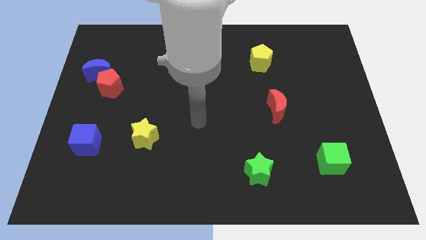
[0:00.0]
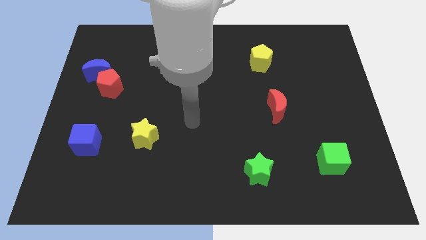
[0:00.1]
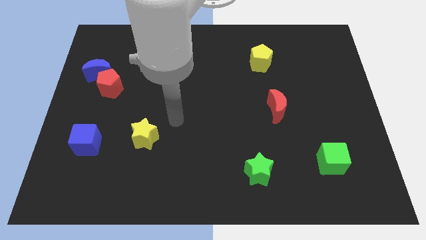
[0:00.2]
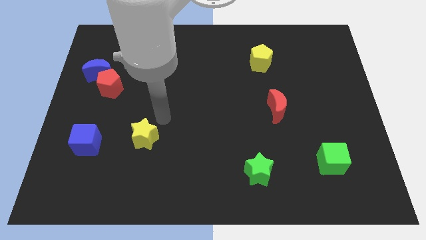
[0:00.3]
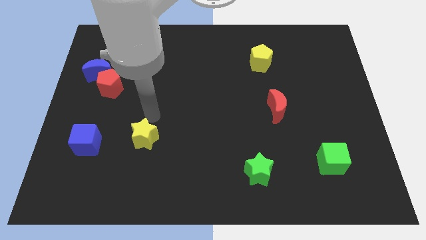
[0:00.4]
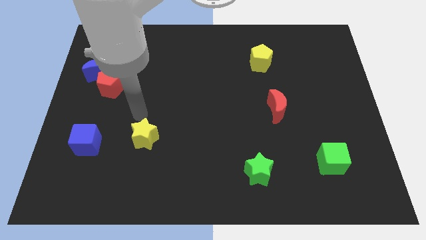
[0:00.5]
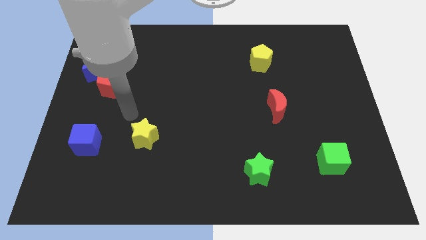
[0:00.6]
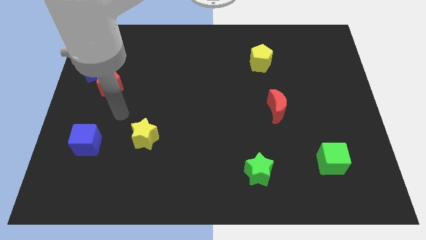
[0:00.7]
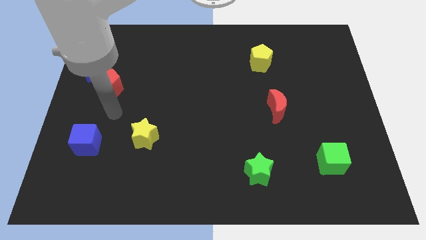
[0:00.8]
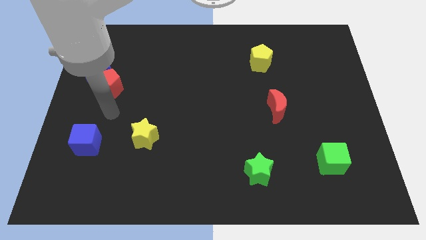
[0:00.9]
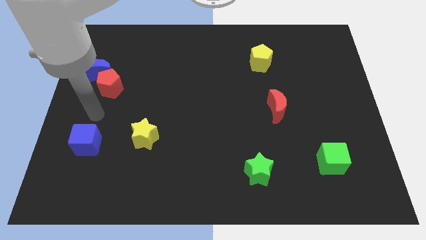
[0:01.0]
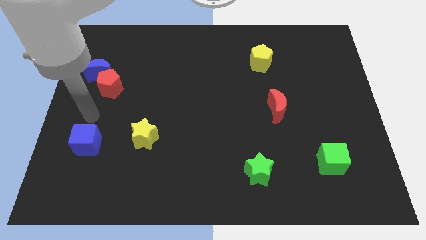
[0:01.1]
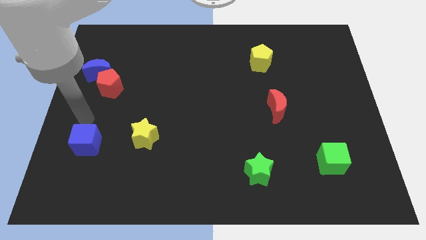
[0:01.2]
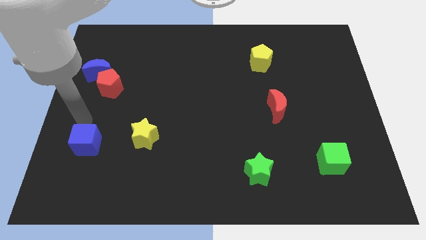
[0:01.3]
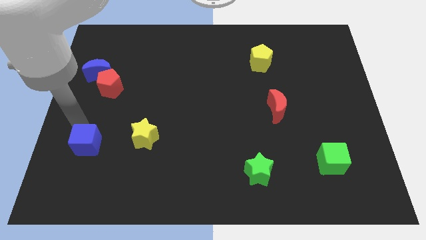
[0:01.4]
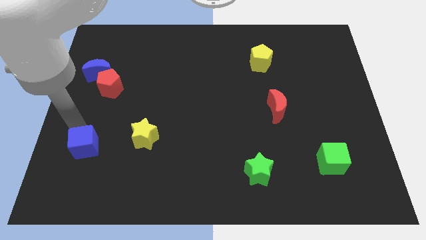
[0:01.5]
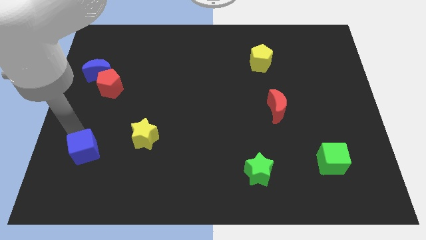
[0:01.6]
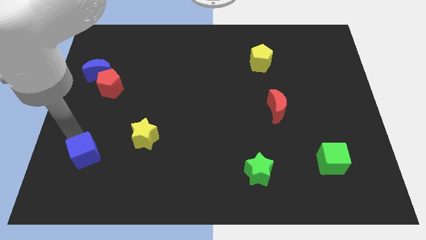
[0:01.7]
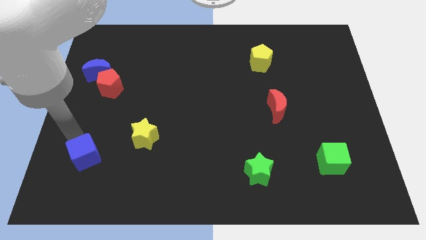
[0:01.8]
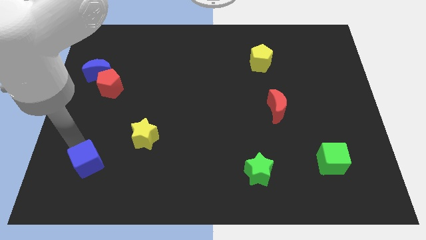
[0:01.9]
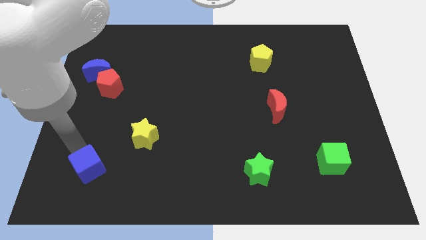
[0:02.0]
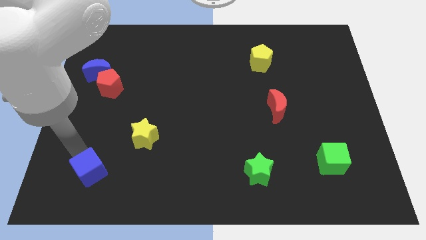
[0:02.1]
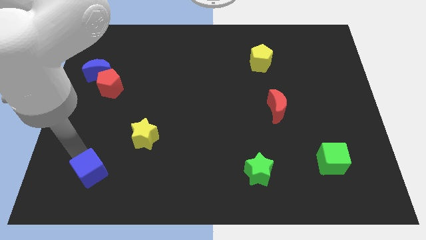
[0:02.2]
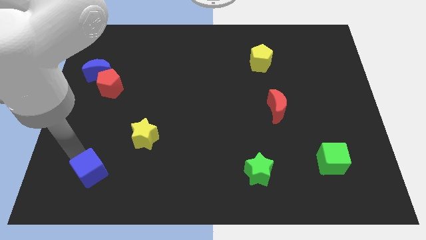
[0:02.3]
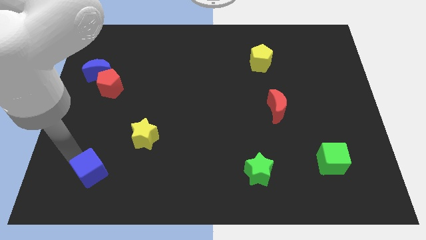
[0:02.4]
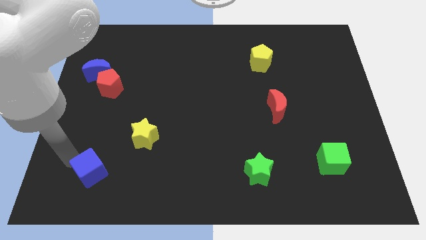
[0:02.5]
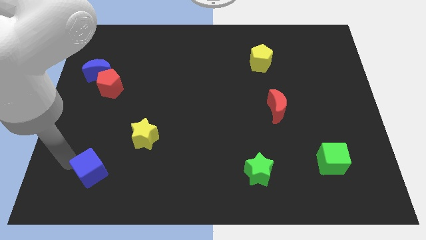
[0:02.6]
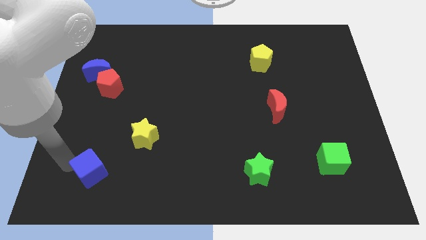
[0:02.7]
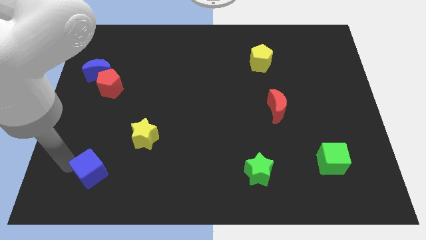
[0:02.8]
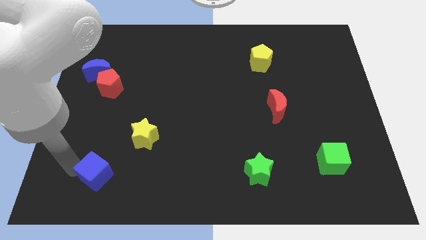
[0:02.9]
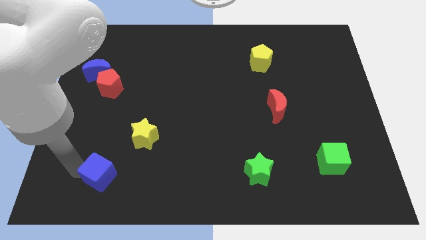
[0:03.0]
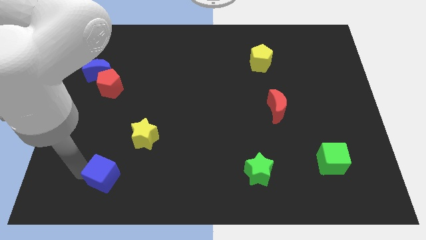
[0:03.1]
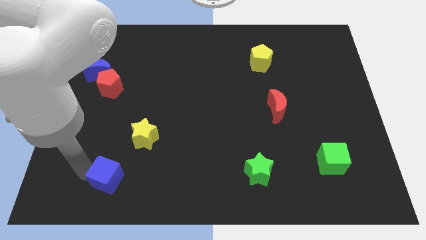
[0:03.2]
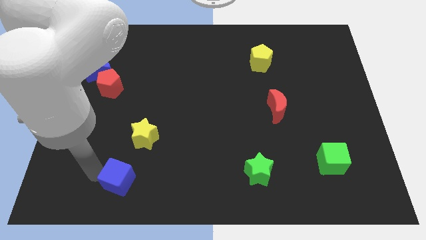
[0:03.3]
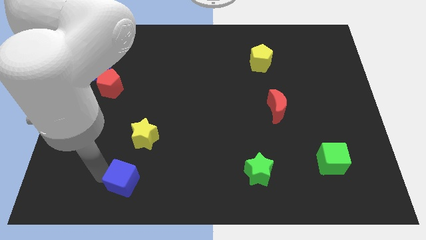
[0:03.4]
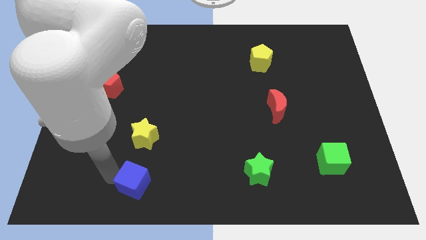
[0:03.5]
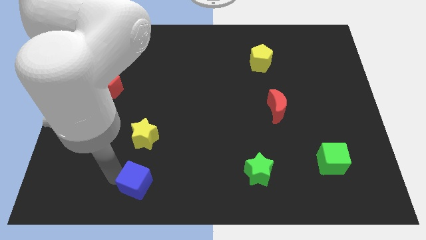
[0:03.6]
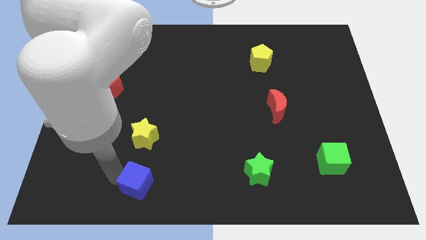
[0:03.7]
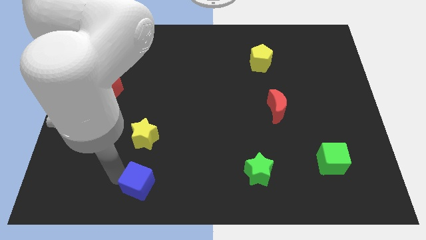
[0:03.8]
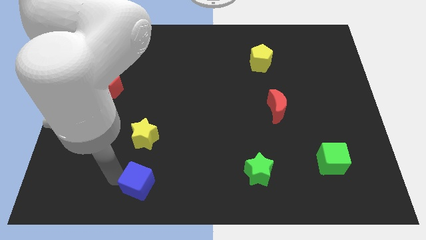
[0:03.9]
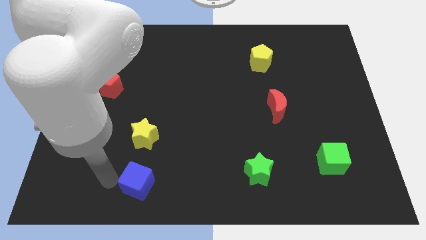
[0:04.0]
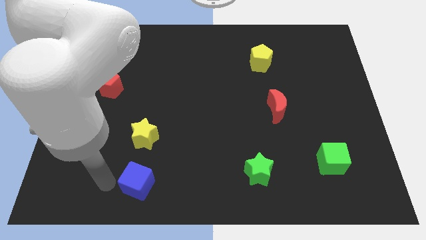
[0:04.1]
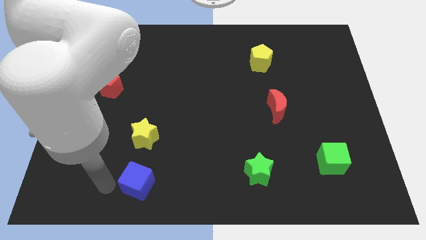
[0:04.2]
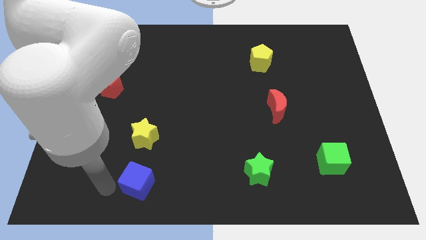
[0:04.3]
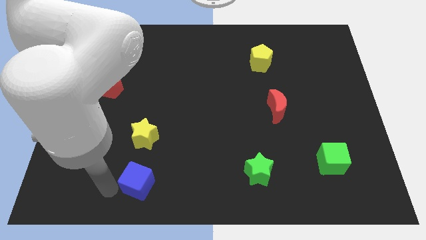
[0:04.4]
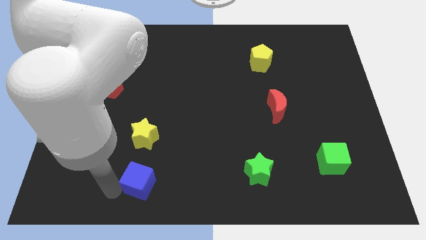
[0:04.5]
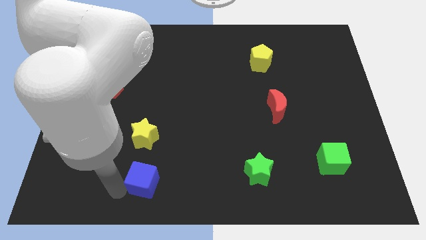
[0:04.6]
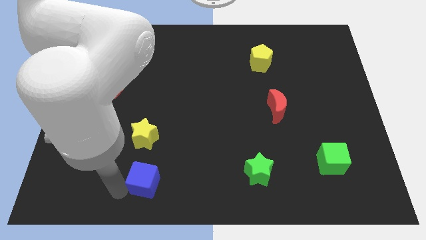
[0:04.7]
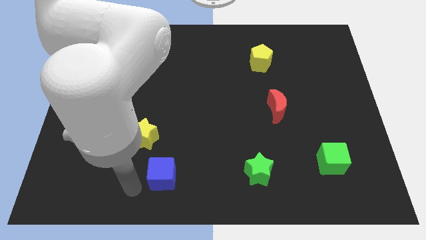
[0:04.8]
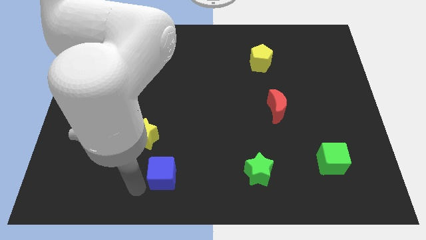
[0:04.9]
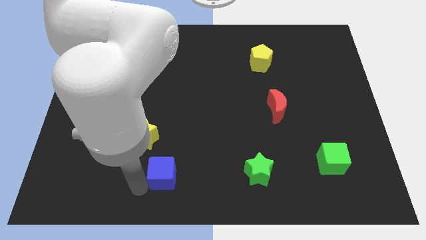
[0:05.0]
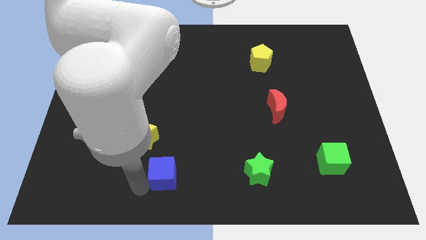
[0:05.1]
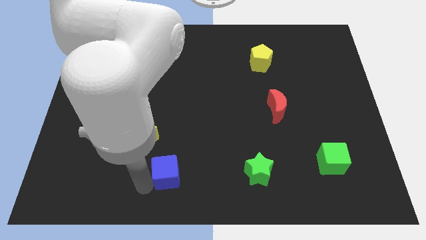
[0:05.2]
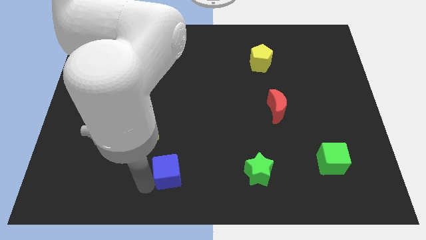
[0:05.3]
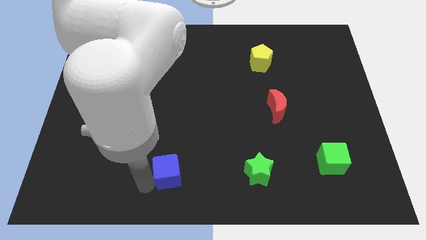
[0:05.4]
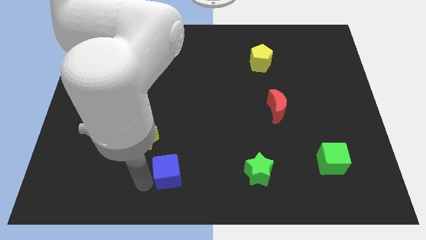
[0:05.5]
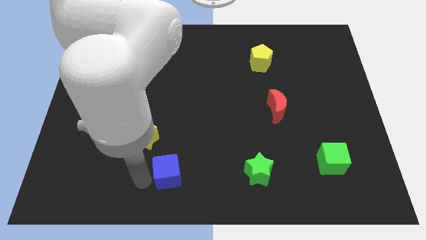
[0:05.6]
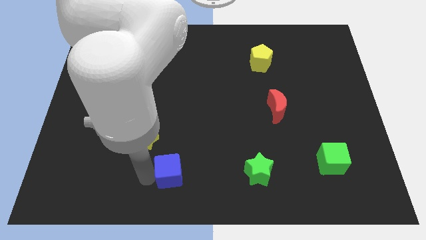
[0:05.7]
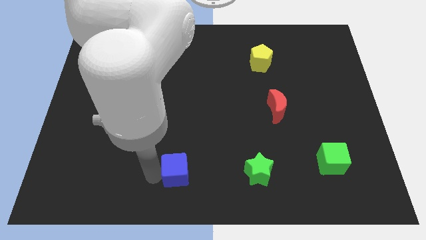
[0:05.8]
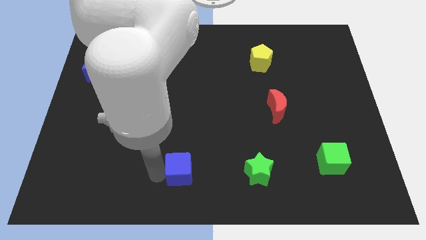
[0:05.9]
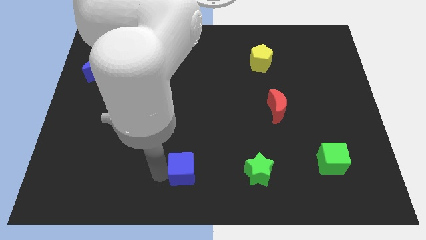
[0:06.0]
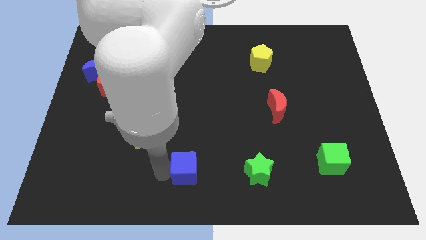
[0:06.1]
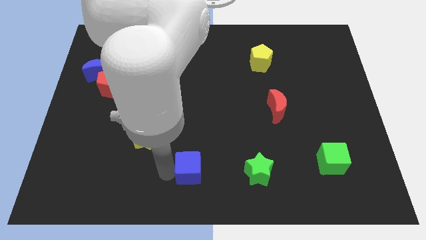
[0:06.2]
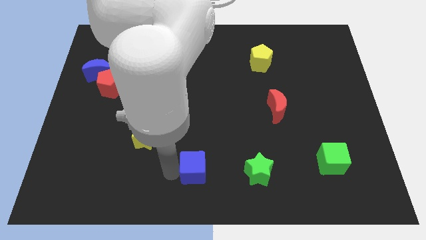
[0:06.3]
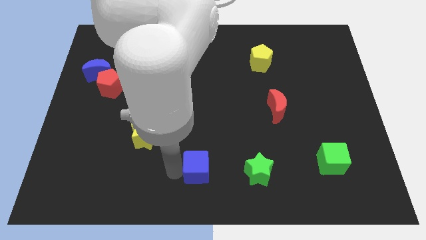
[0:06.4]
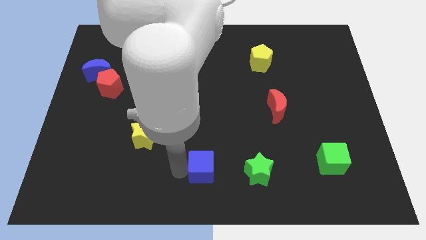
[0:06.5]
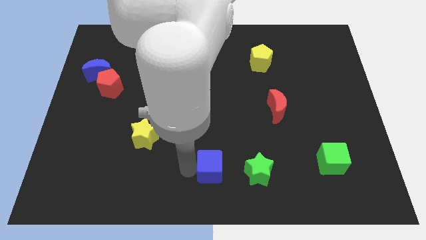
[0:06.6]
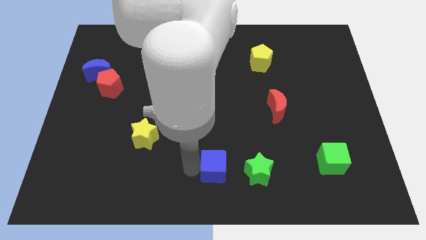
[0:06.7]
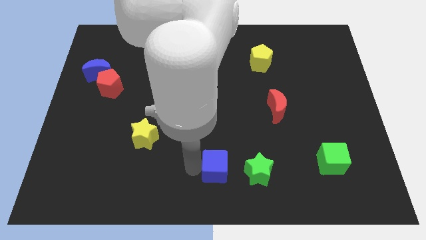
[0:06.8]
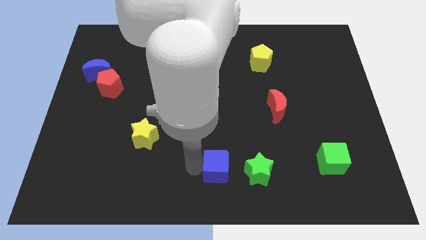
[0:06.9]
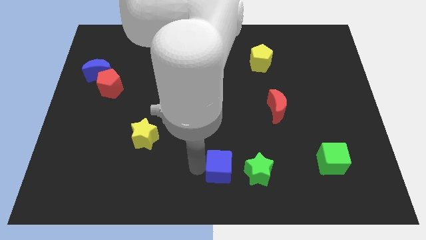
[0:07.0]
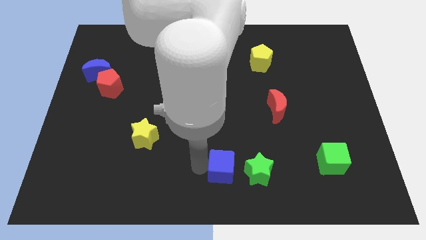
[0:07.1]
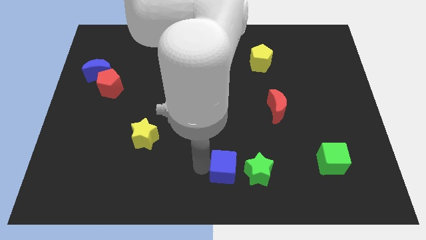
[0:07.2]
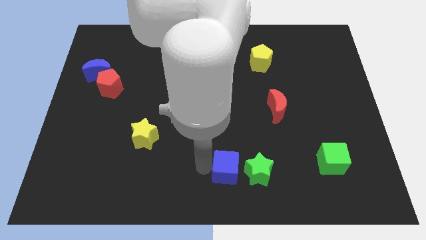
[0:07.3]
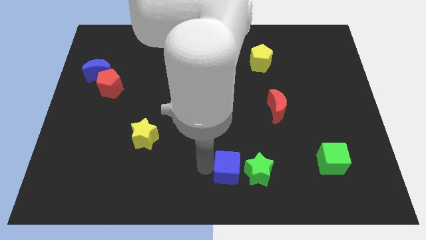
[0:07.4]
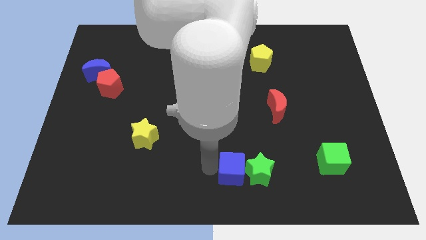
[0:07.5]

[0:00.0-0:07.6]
move the blue cube next to the green star

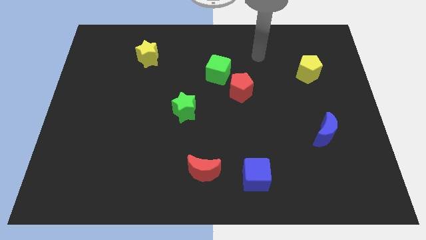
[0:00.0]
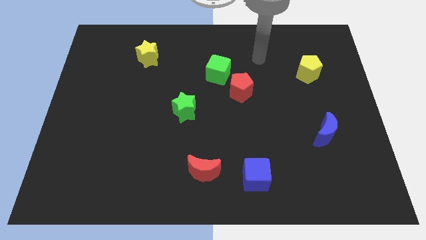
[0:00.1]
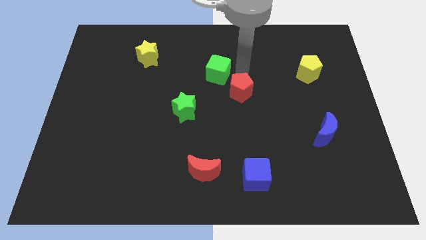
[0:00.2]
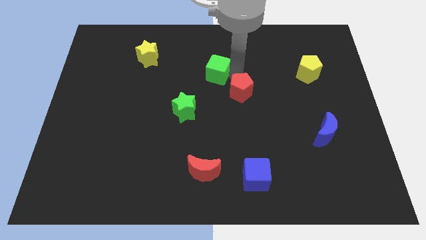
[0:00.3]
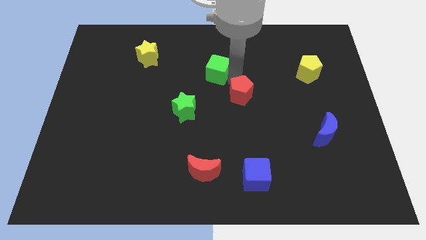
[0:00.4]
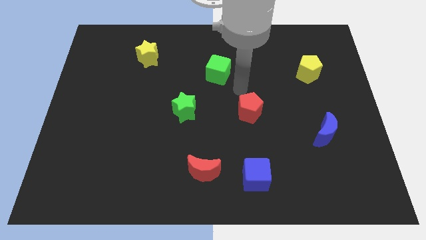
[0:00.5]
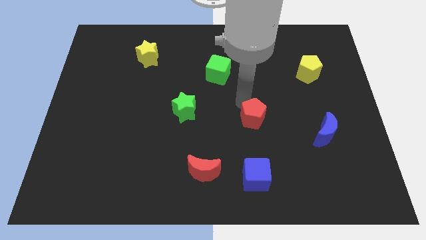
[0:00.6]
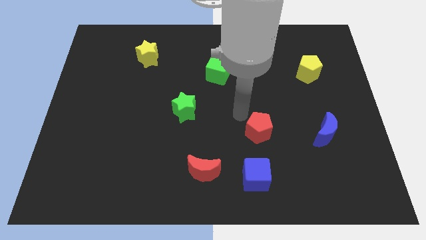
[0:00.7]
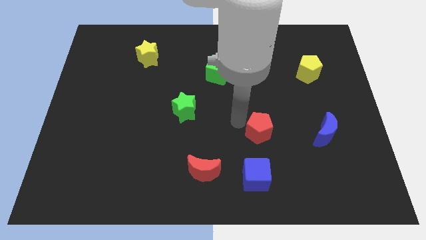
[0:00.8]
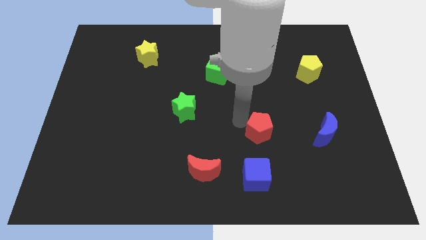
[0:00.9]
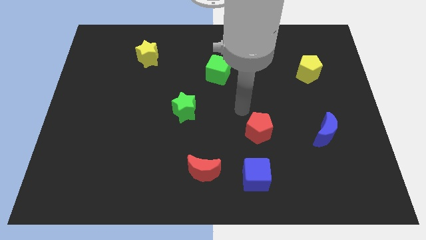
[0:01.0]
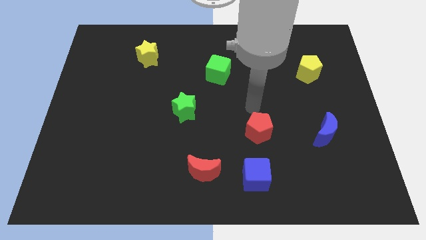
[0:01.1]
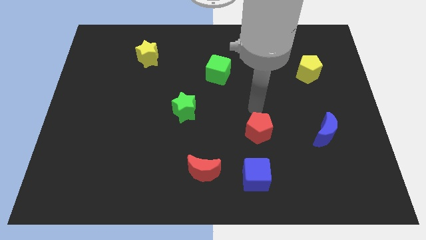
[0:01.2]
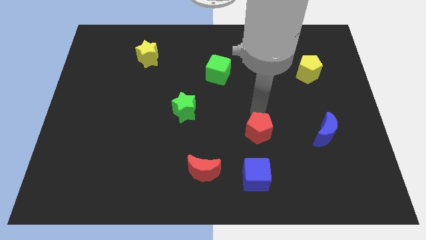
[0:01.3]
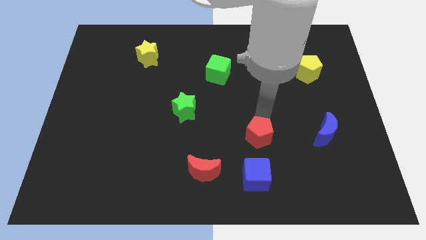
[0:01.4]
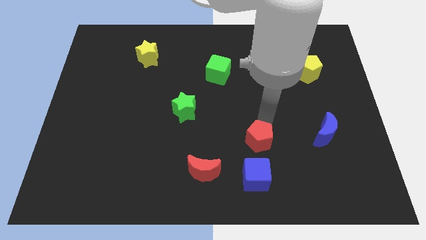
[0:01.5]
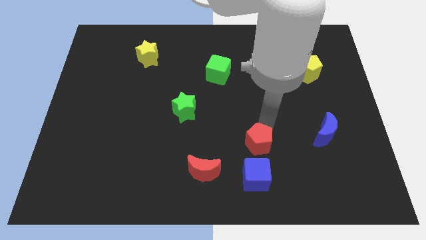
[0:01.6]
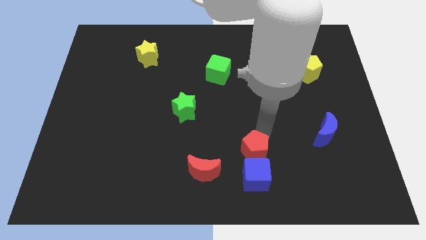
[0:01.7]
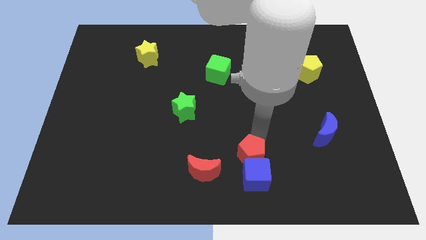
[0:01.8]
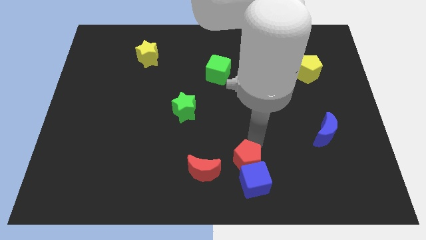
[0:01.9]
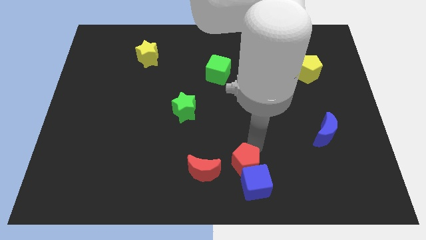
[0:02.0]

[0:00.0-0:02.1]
push the red pentagon towards the blue cube
